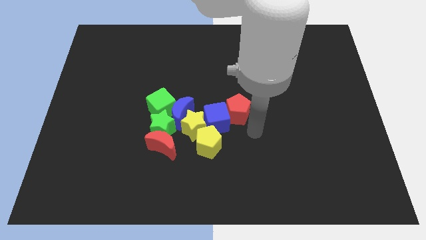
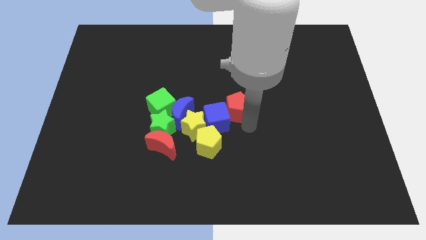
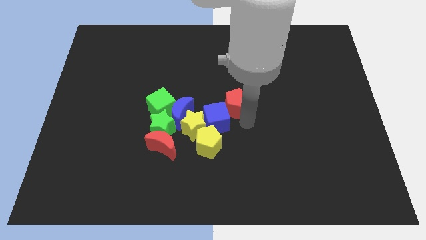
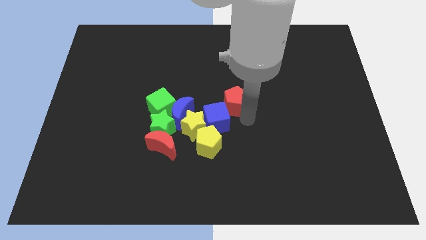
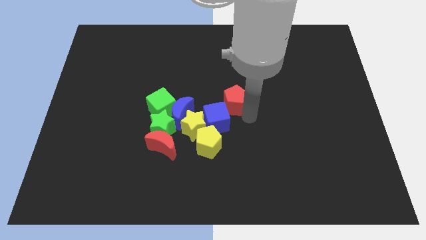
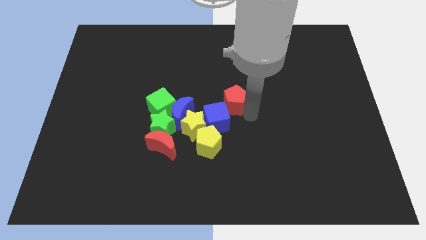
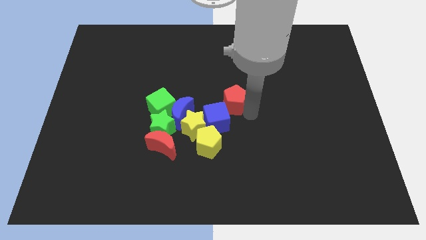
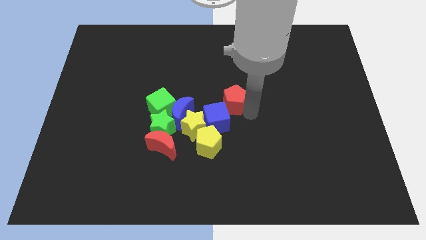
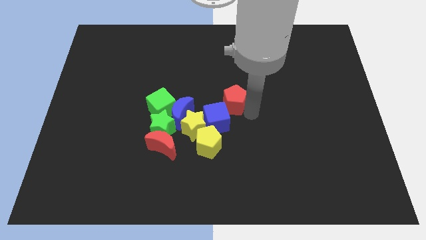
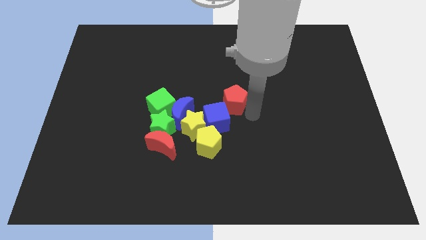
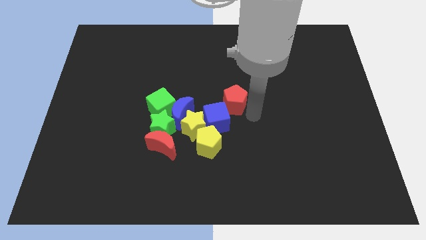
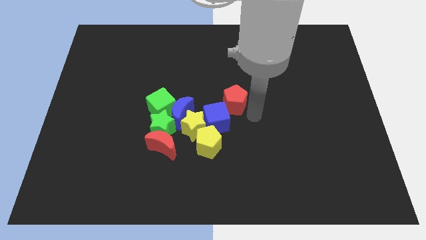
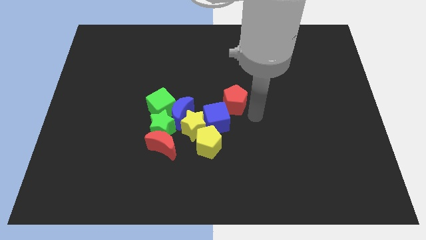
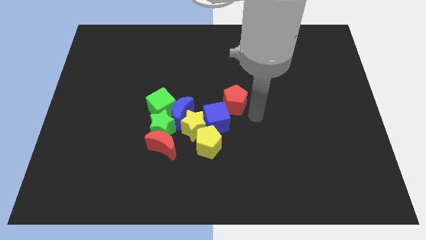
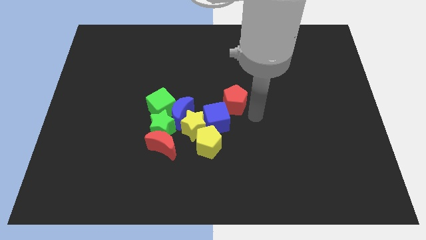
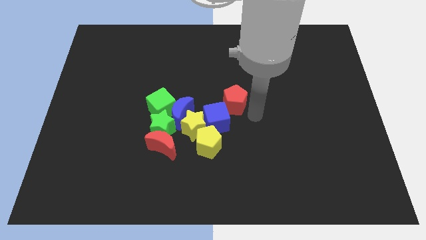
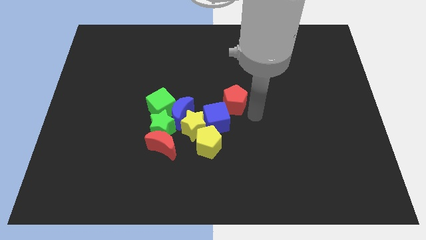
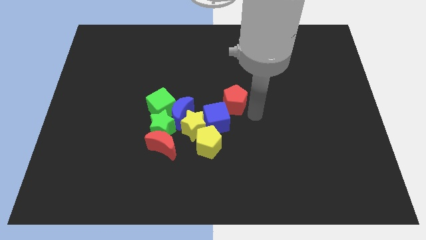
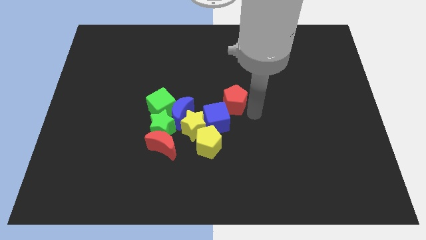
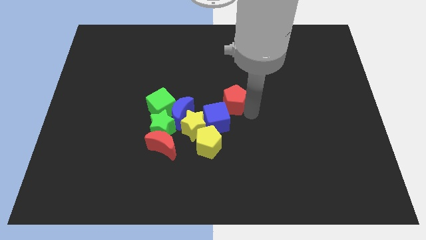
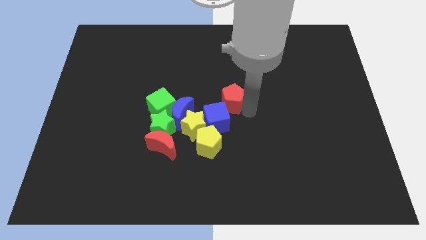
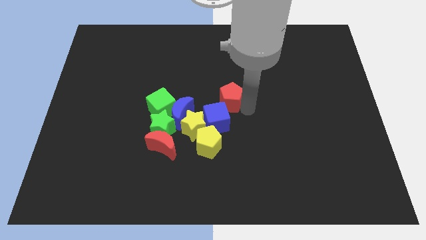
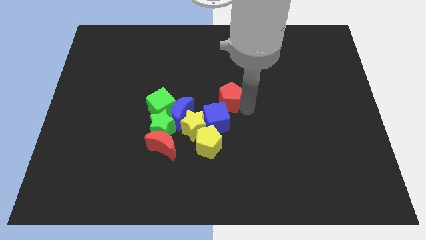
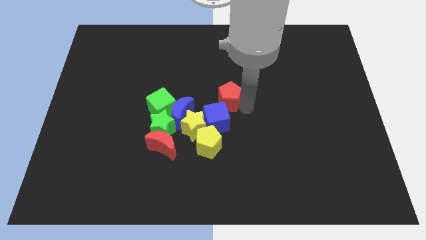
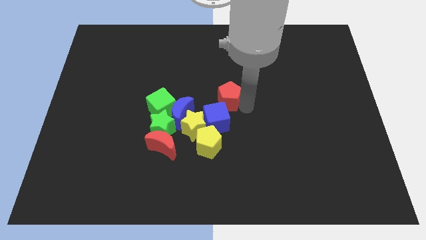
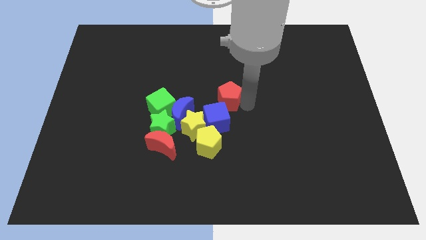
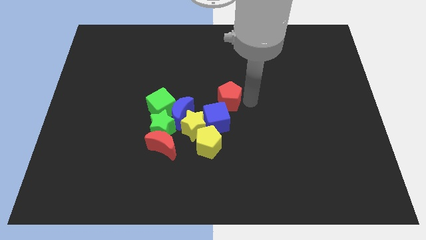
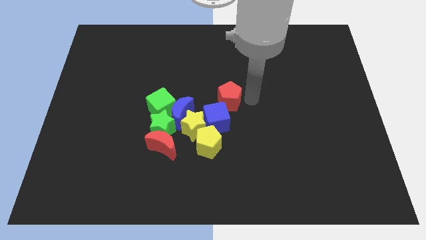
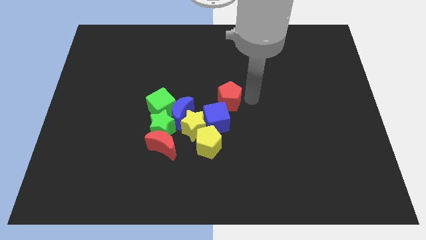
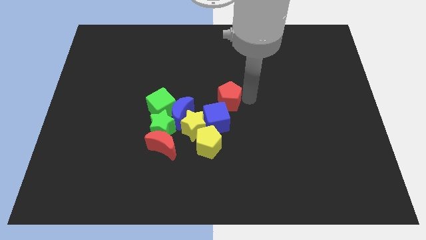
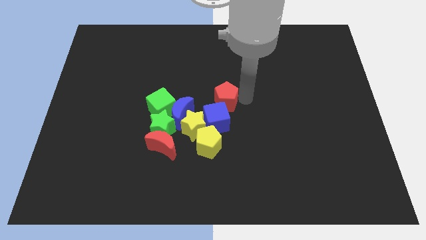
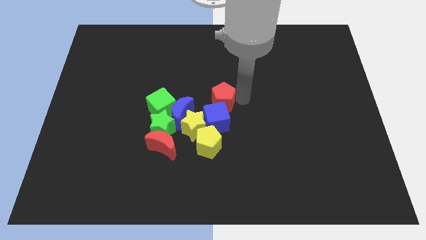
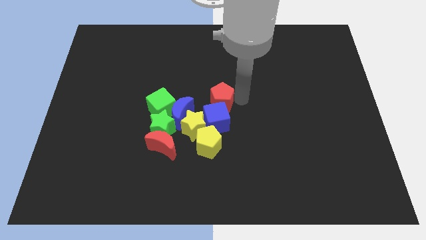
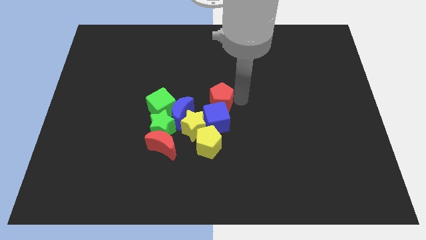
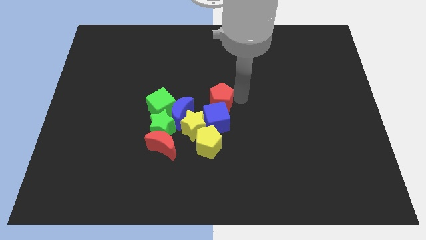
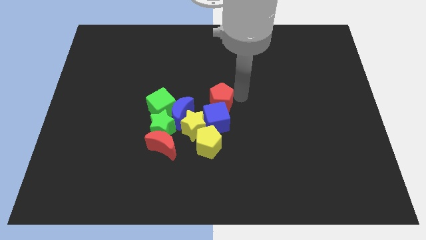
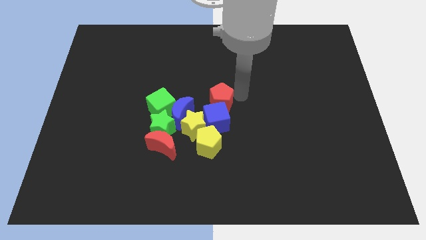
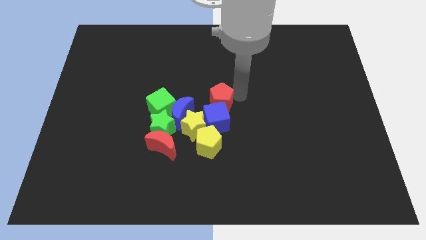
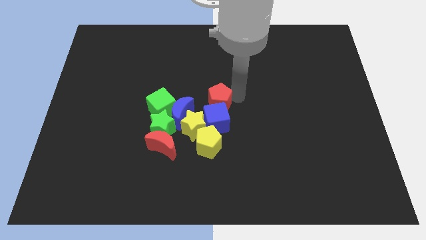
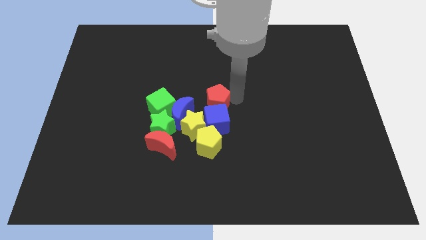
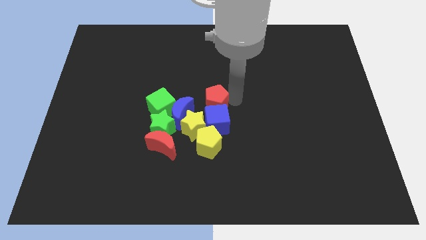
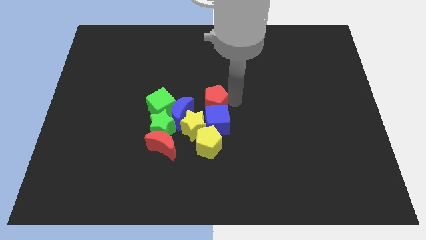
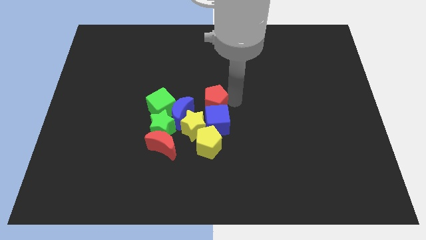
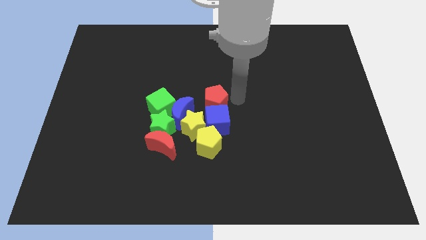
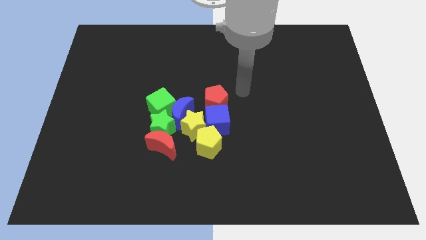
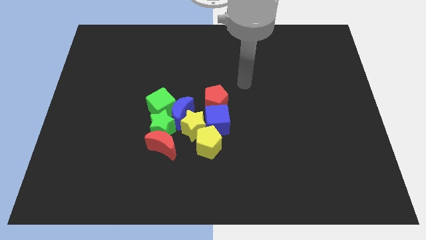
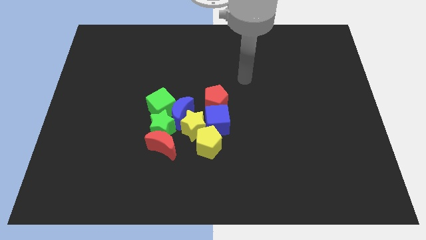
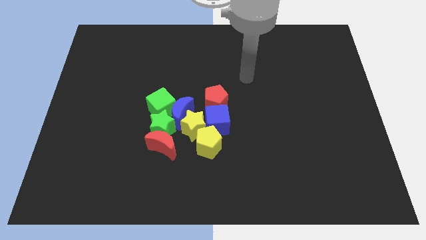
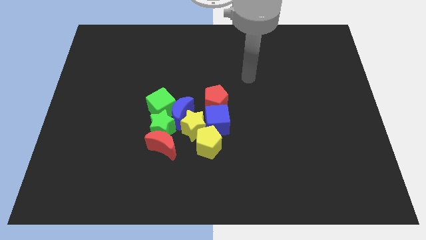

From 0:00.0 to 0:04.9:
place the red pentagon above the blue cube

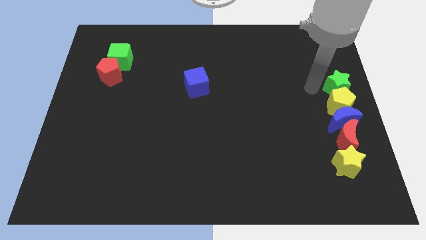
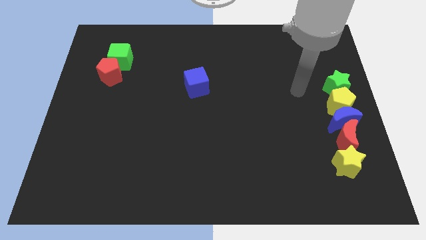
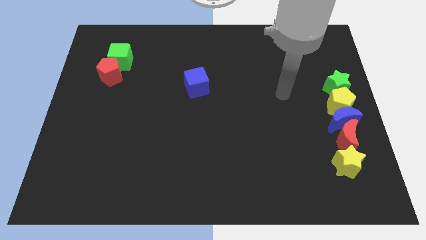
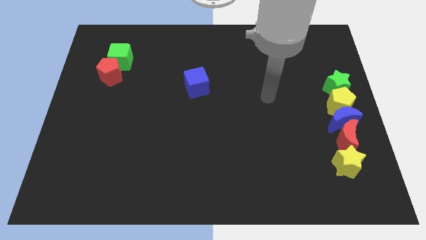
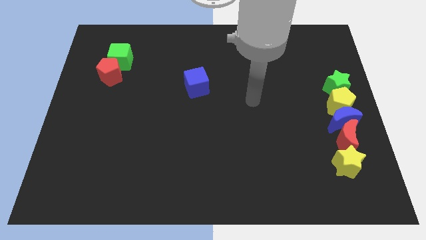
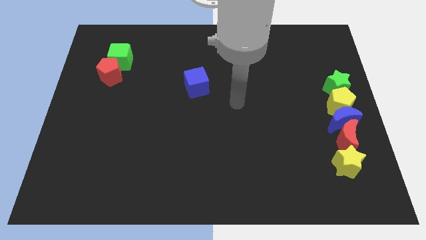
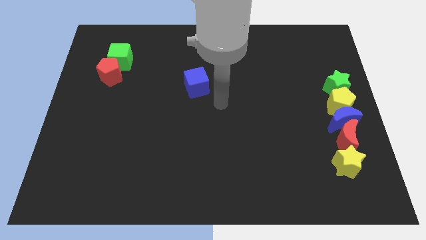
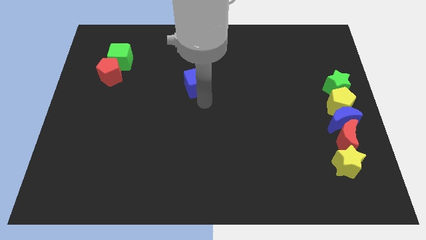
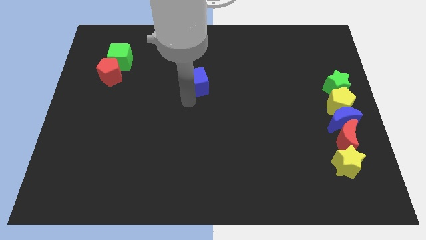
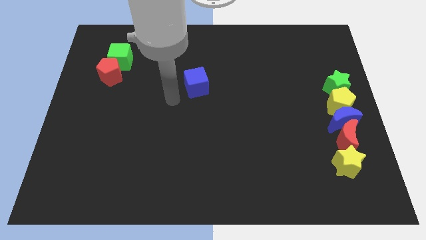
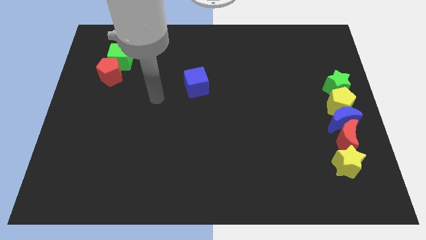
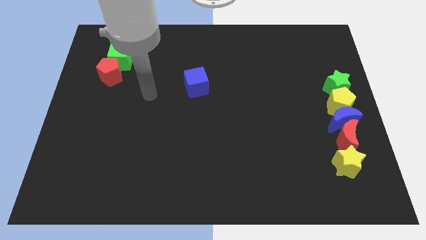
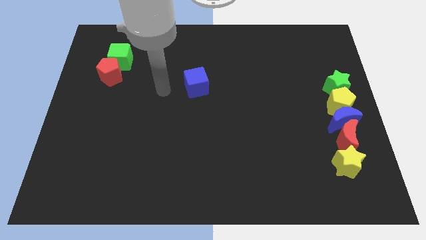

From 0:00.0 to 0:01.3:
move your arm away from green star

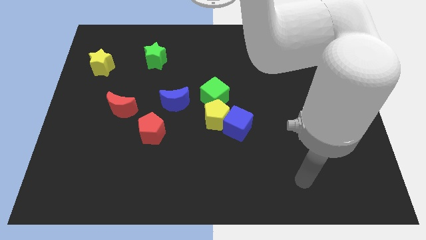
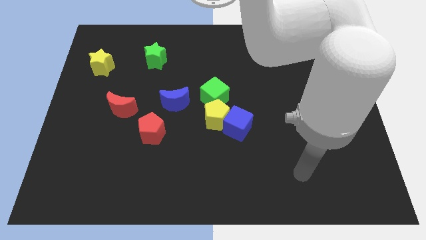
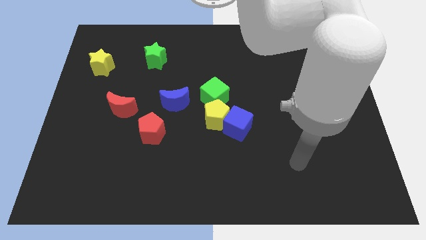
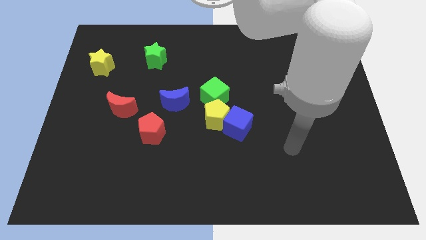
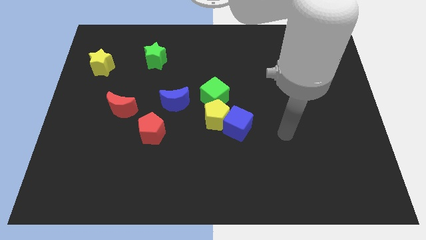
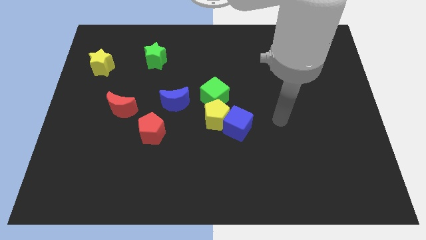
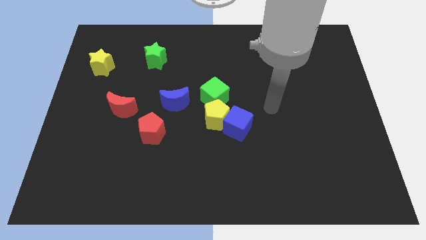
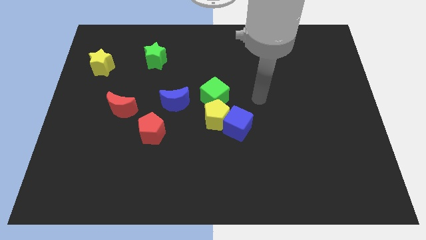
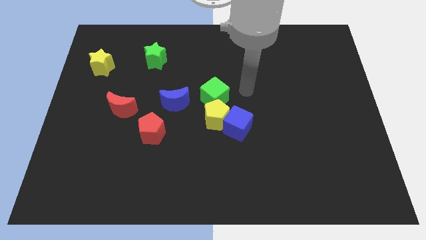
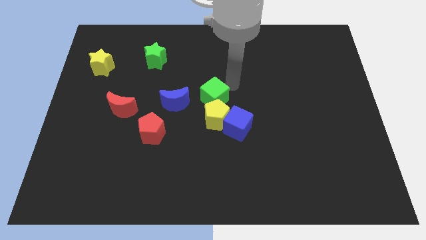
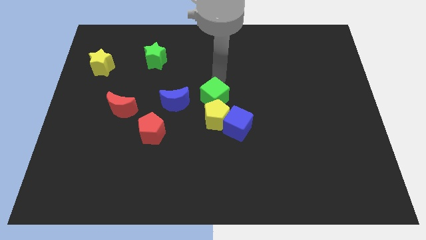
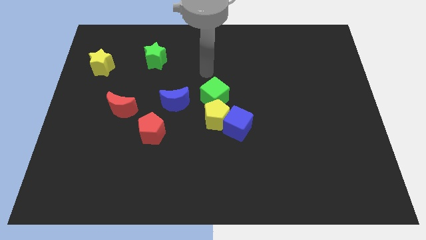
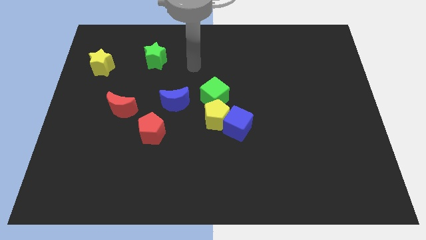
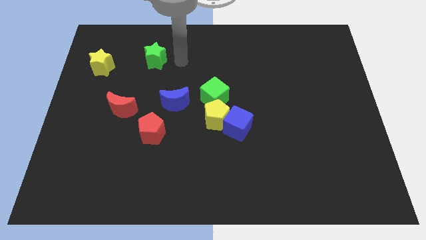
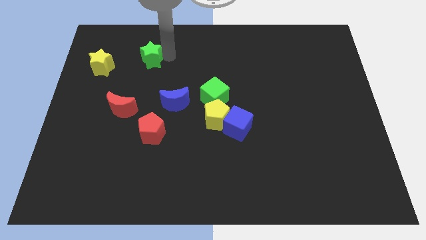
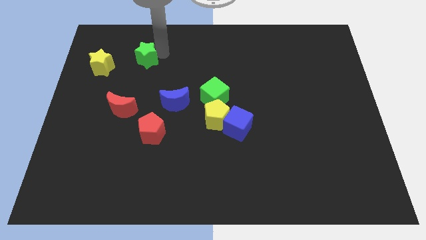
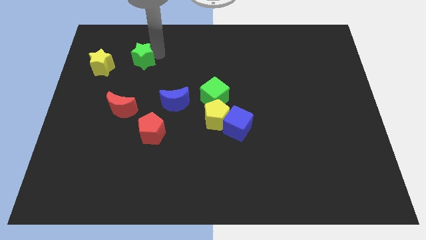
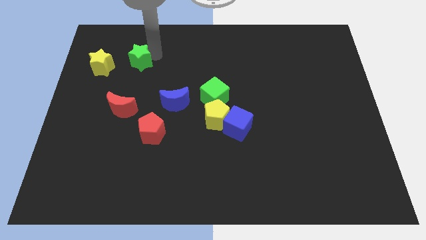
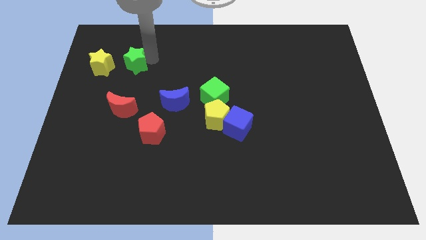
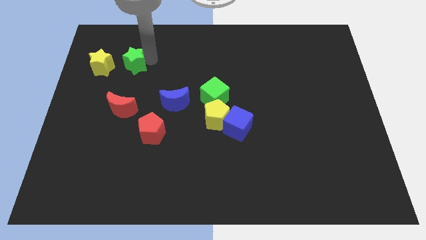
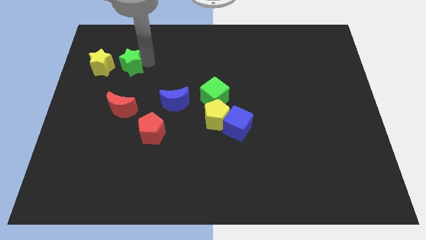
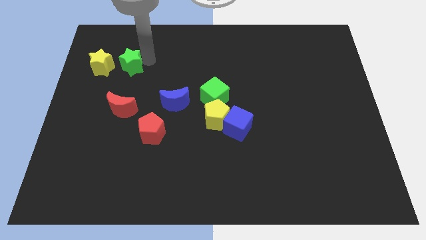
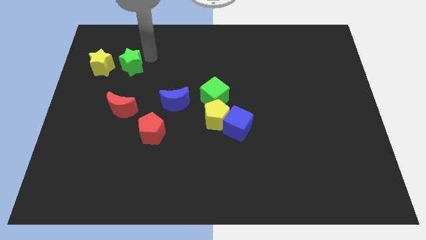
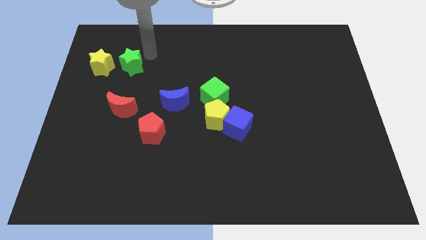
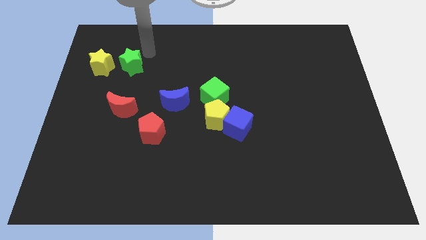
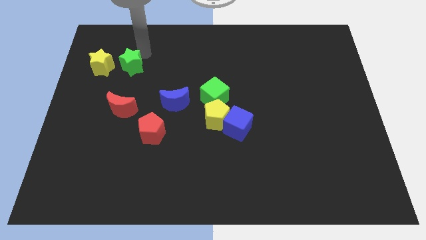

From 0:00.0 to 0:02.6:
place green star beside yellow star

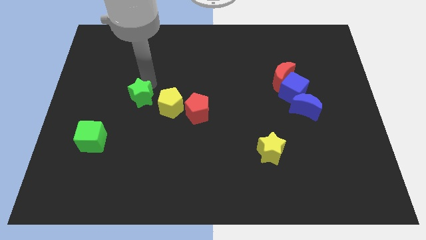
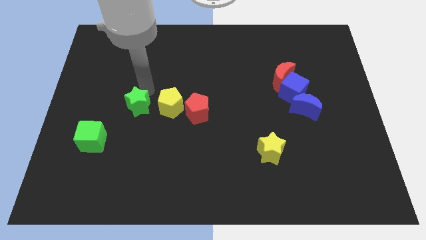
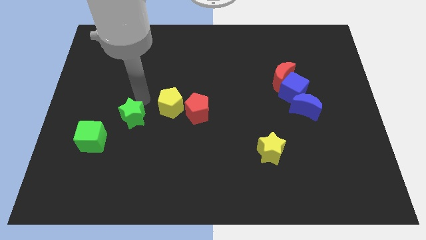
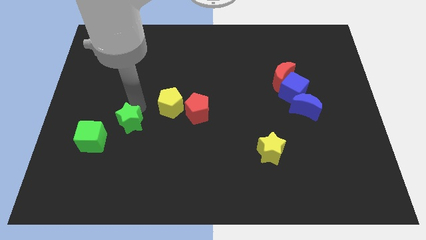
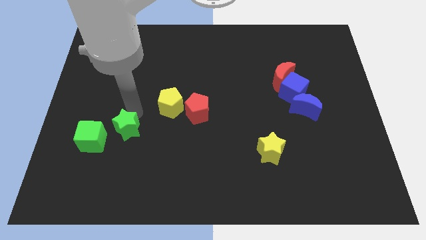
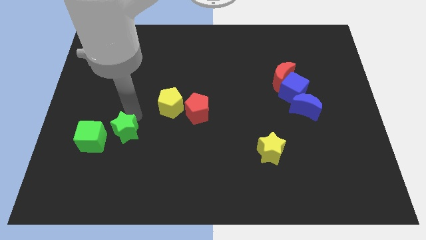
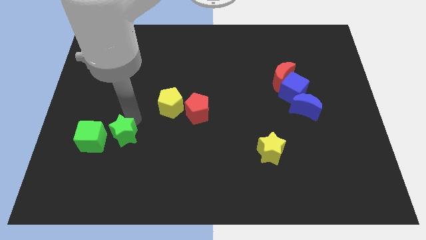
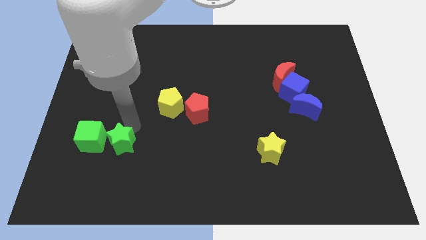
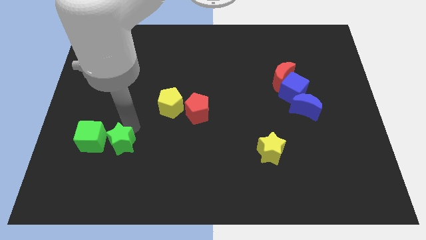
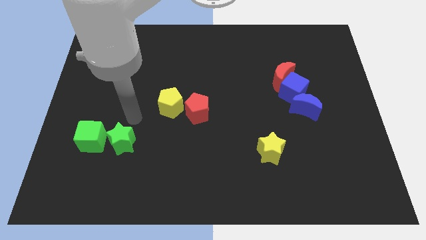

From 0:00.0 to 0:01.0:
move the green star to the right of the green cube
